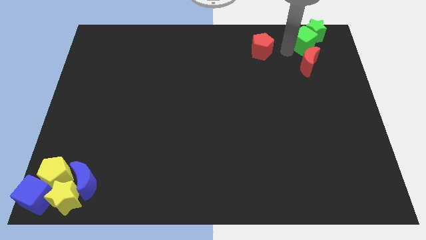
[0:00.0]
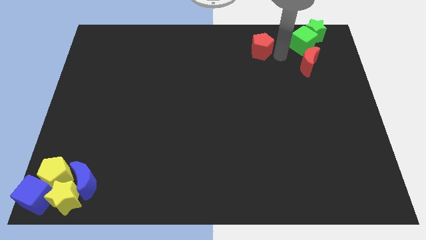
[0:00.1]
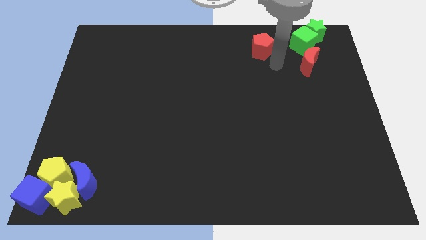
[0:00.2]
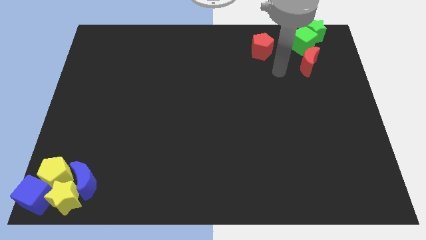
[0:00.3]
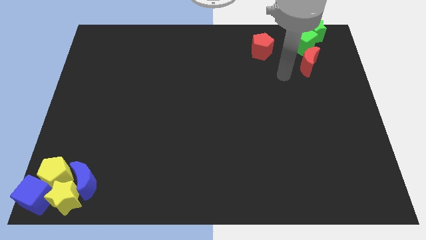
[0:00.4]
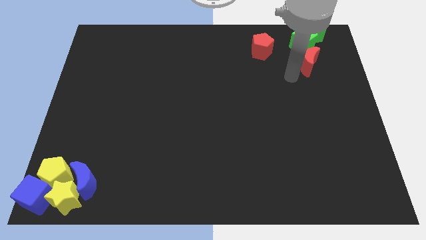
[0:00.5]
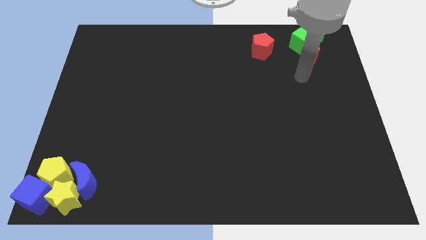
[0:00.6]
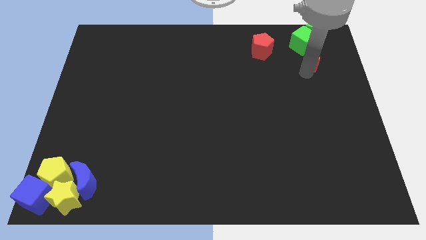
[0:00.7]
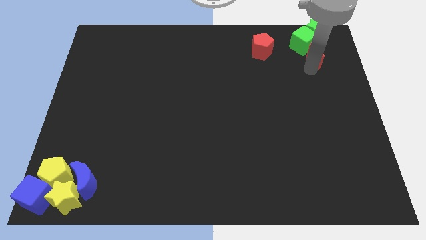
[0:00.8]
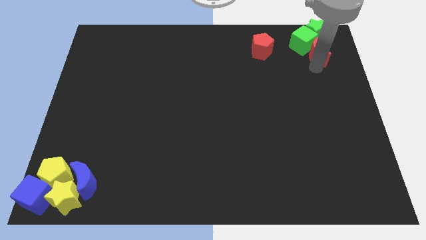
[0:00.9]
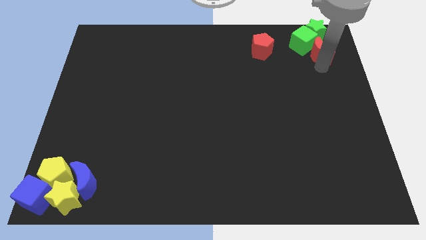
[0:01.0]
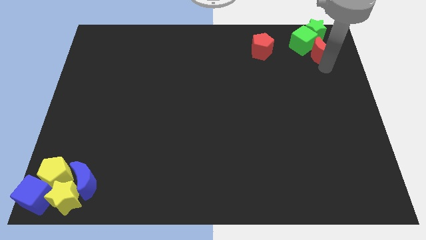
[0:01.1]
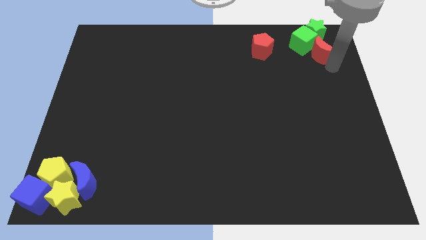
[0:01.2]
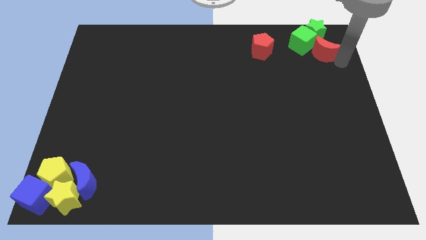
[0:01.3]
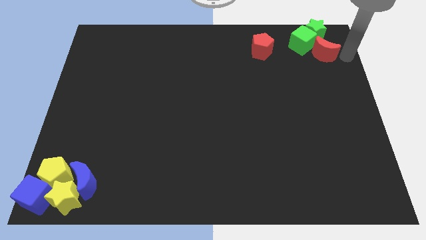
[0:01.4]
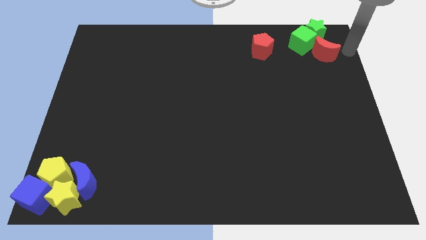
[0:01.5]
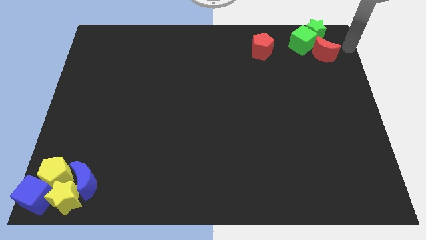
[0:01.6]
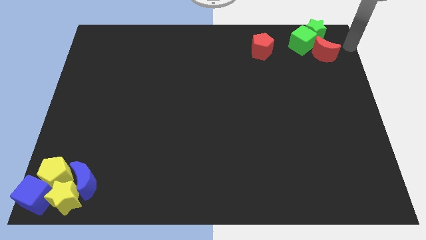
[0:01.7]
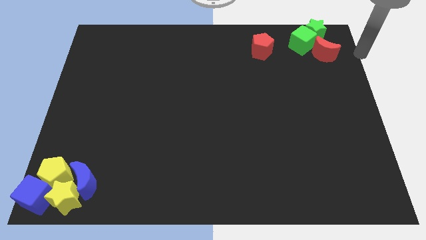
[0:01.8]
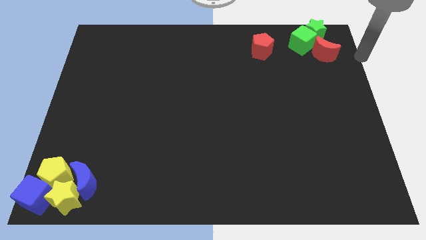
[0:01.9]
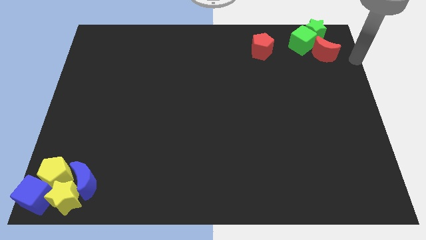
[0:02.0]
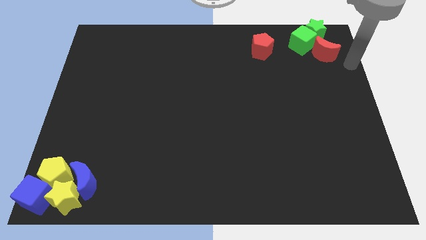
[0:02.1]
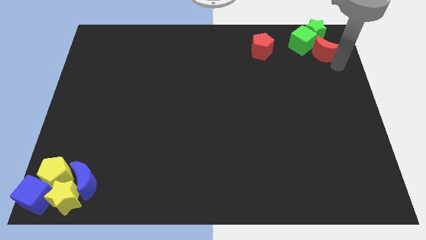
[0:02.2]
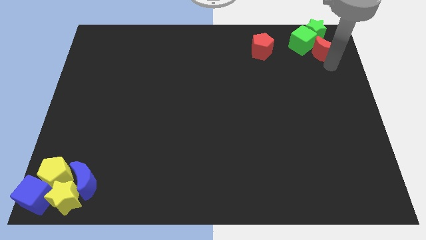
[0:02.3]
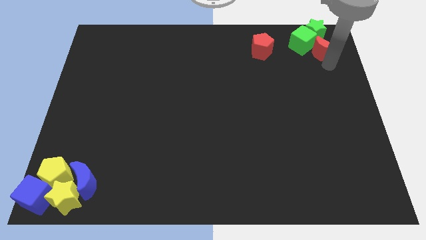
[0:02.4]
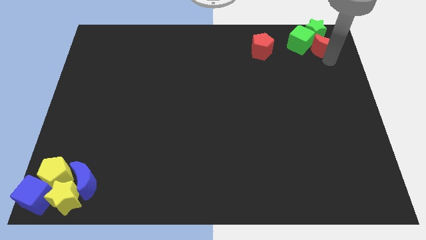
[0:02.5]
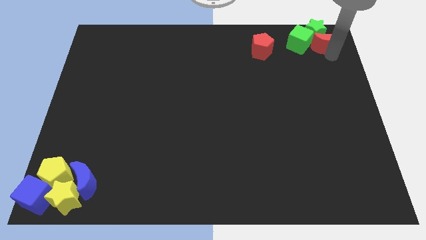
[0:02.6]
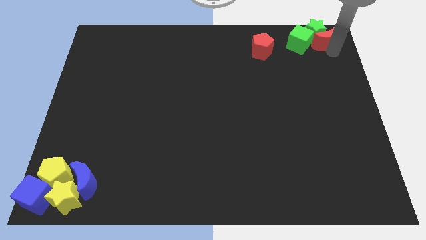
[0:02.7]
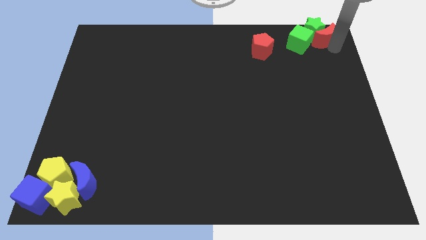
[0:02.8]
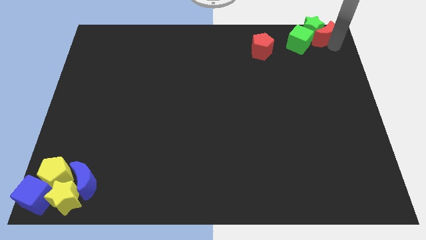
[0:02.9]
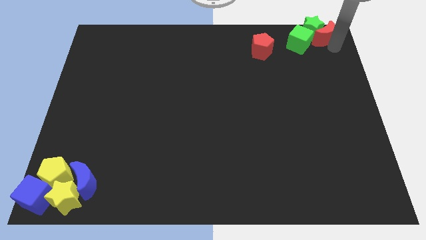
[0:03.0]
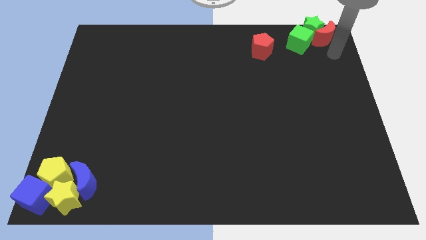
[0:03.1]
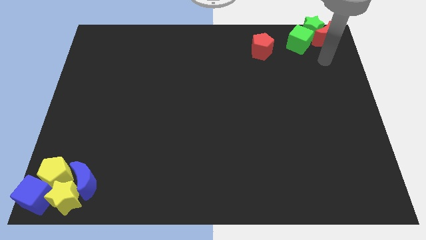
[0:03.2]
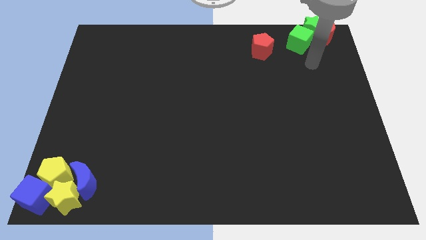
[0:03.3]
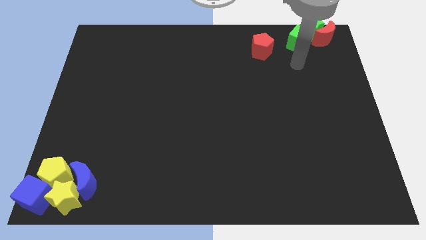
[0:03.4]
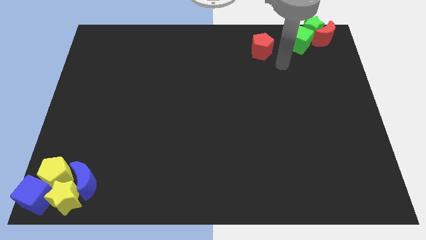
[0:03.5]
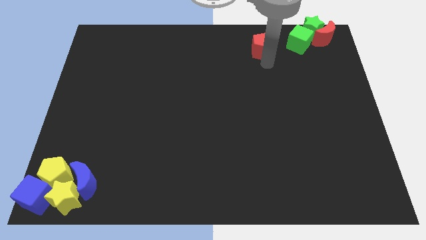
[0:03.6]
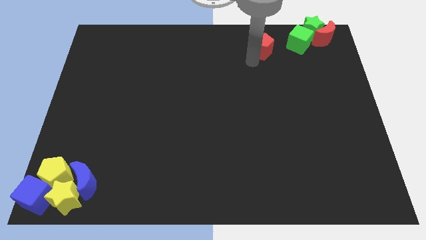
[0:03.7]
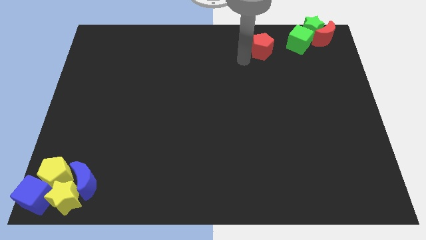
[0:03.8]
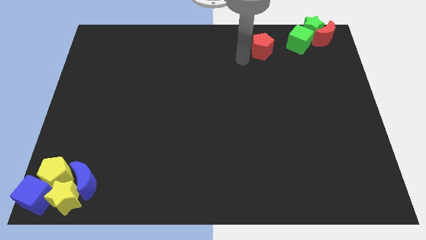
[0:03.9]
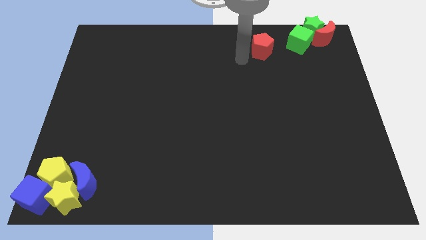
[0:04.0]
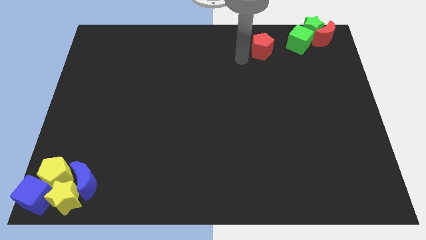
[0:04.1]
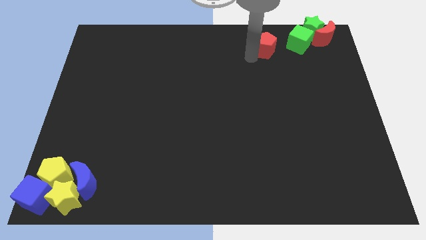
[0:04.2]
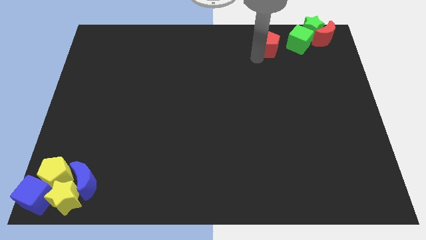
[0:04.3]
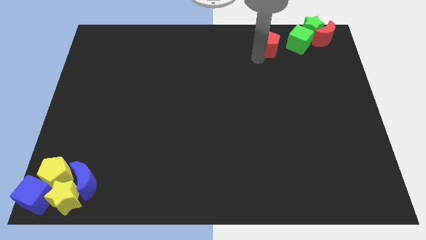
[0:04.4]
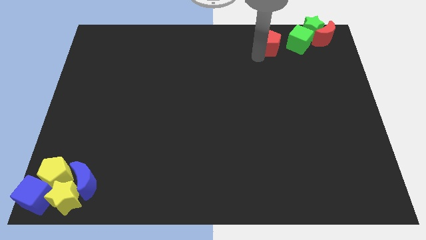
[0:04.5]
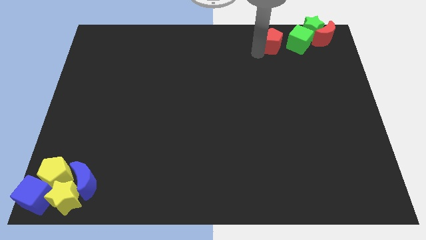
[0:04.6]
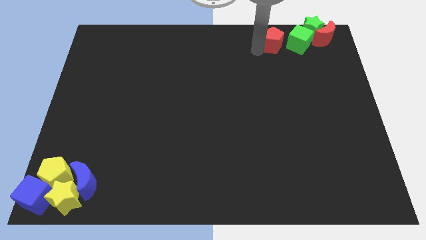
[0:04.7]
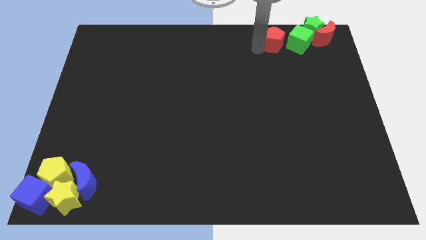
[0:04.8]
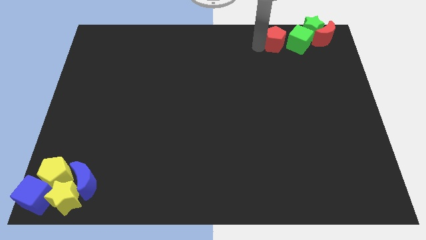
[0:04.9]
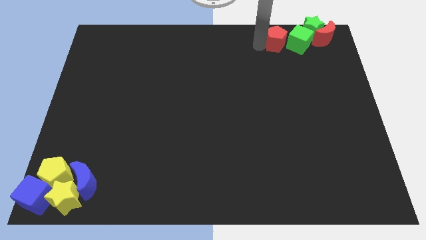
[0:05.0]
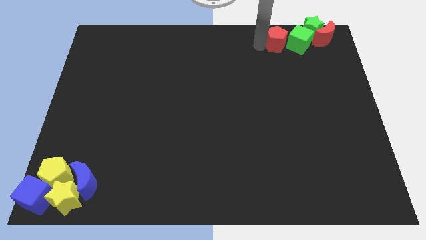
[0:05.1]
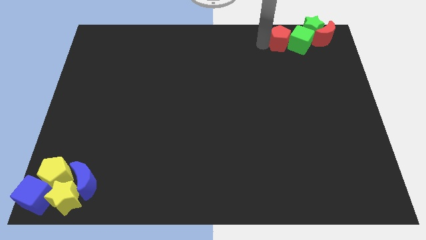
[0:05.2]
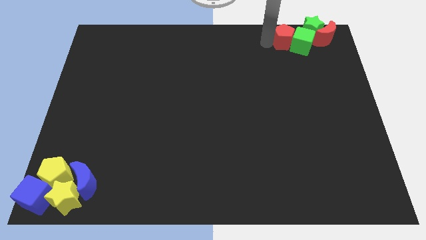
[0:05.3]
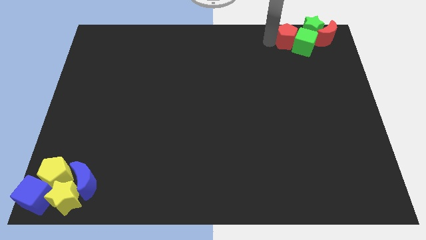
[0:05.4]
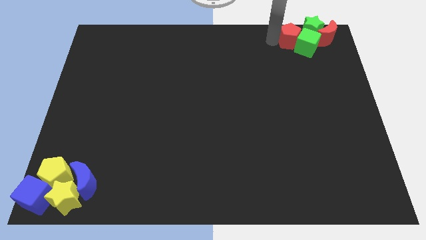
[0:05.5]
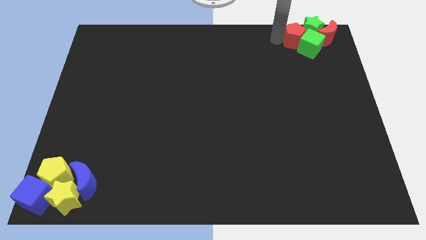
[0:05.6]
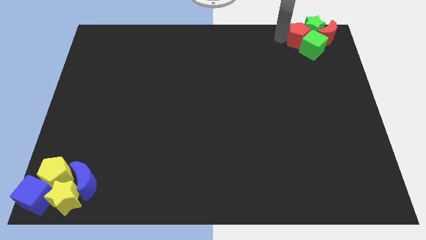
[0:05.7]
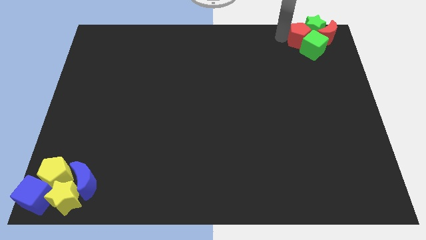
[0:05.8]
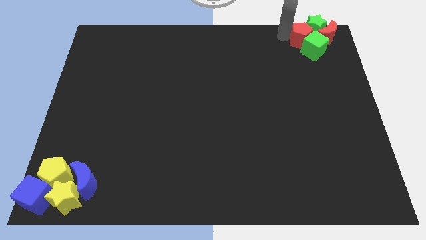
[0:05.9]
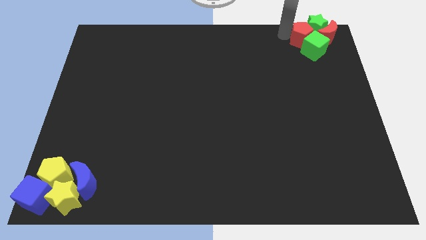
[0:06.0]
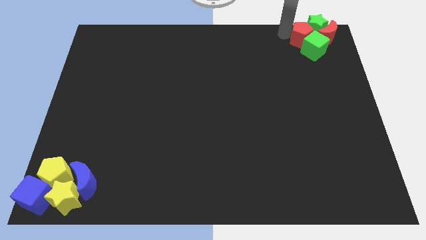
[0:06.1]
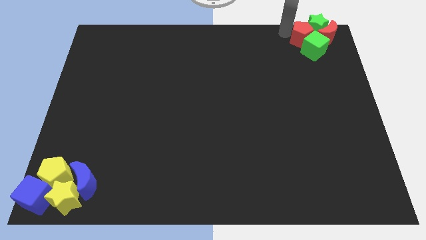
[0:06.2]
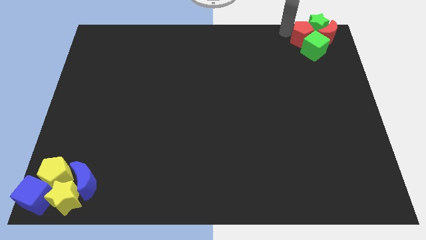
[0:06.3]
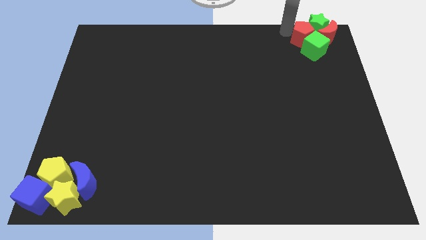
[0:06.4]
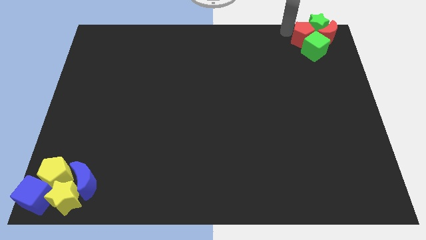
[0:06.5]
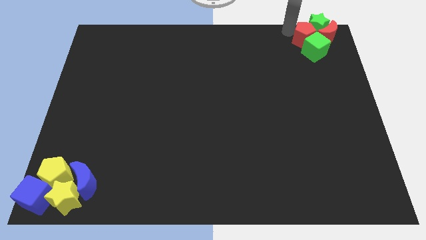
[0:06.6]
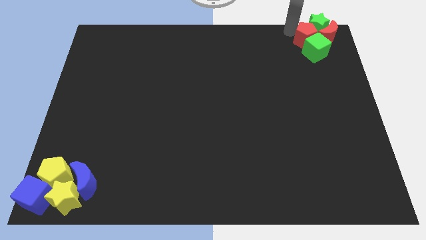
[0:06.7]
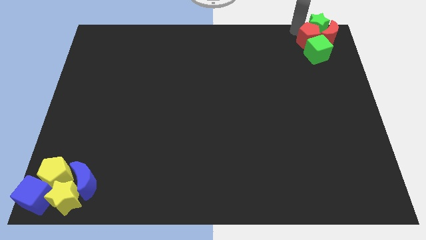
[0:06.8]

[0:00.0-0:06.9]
push a group of red and green blocks to the top right corner of the board

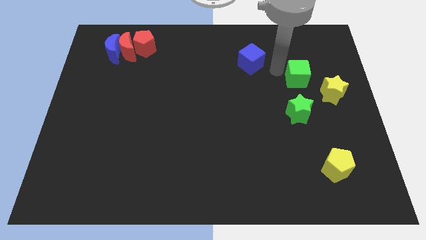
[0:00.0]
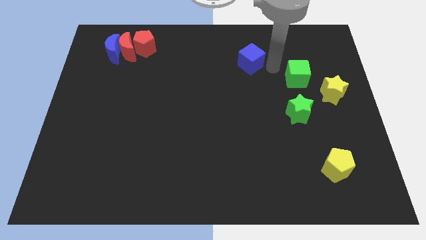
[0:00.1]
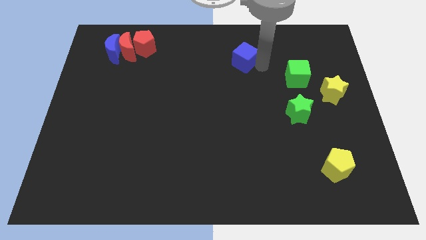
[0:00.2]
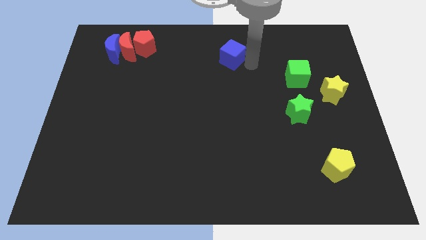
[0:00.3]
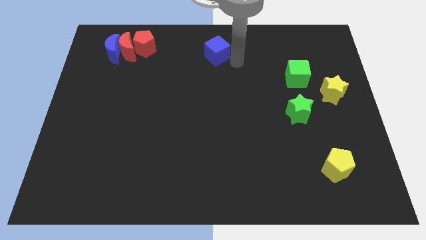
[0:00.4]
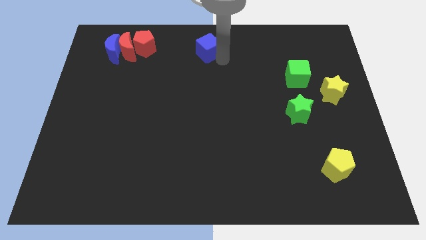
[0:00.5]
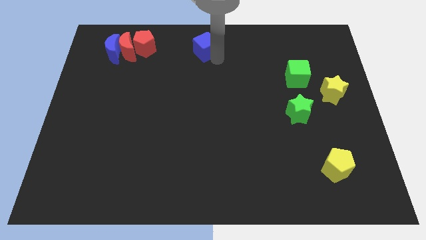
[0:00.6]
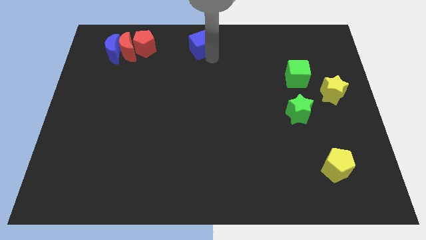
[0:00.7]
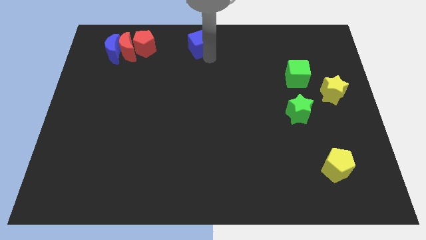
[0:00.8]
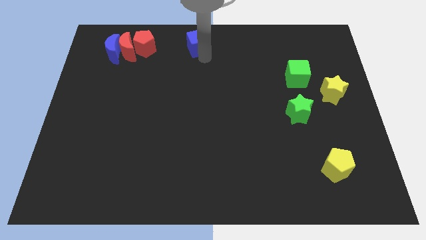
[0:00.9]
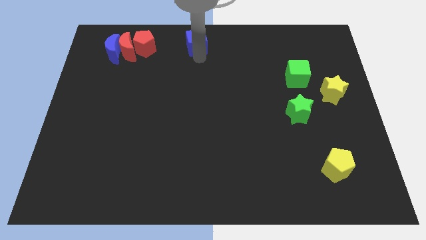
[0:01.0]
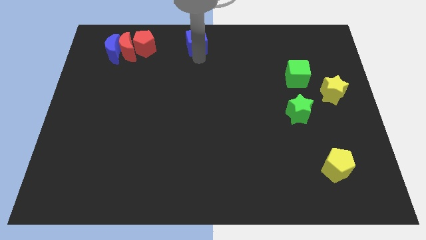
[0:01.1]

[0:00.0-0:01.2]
move blue cube to the center top

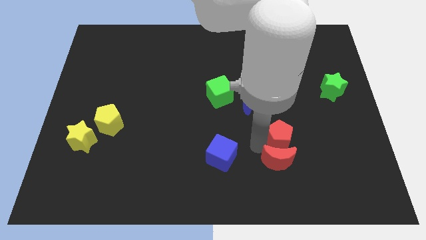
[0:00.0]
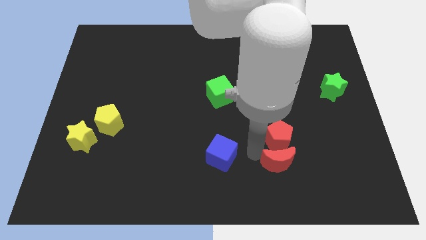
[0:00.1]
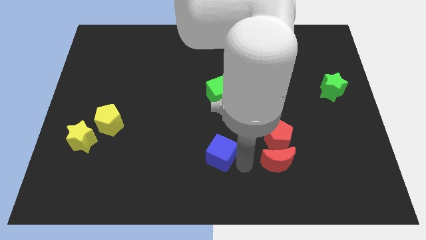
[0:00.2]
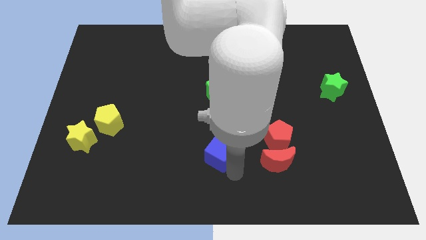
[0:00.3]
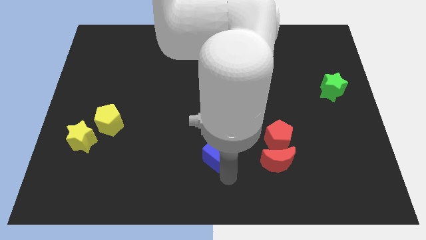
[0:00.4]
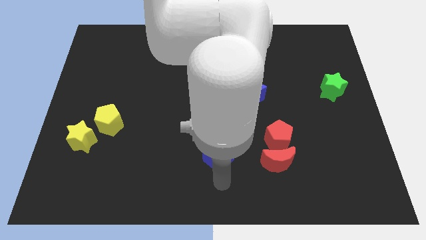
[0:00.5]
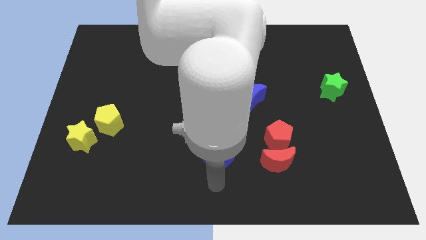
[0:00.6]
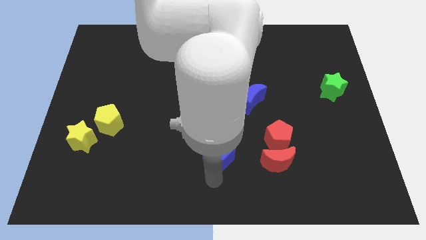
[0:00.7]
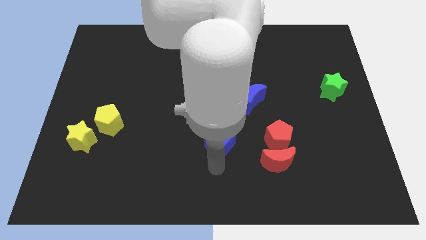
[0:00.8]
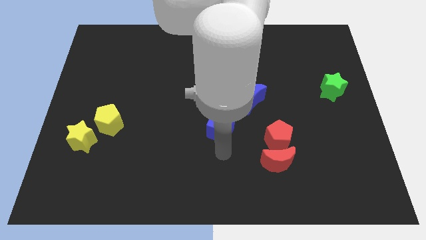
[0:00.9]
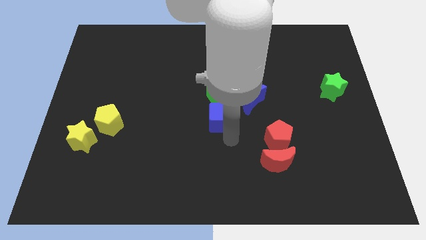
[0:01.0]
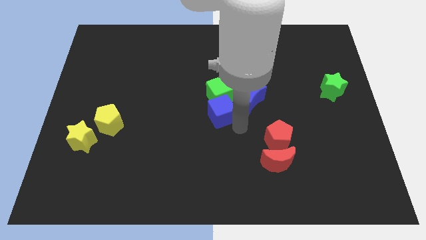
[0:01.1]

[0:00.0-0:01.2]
push the blue cube into the green cube
